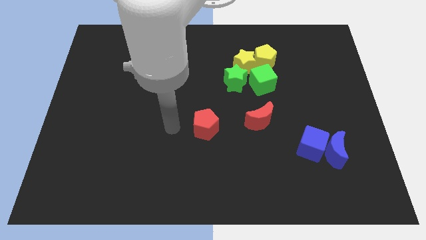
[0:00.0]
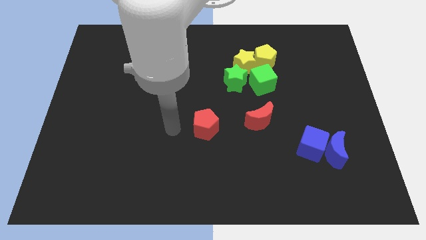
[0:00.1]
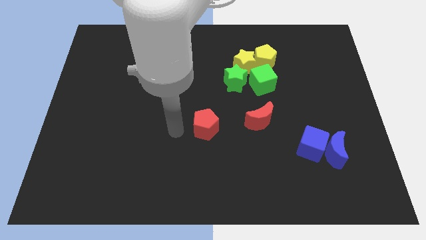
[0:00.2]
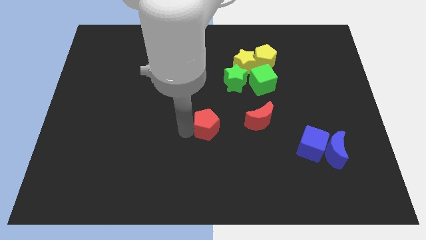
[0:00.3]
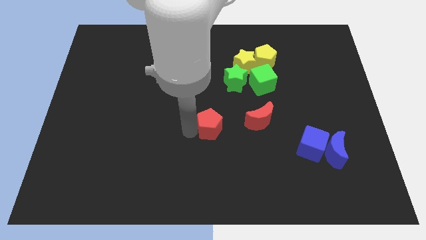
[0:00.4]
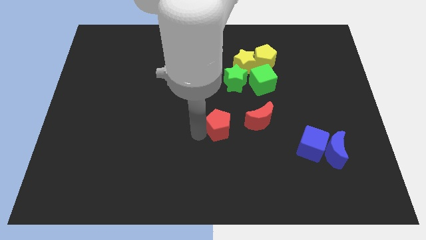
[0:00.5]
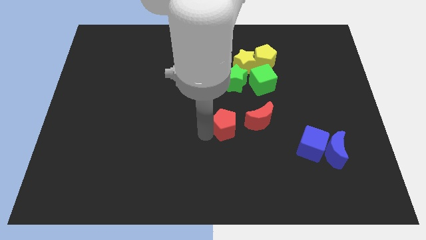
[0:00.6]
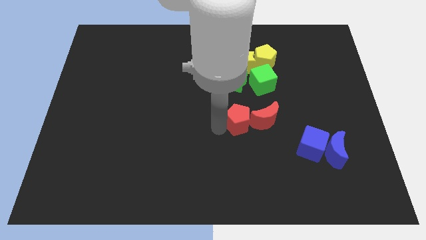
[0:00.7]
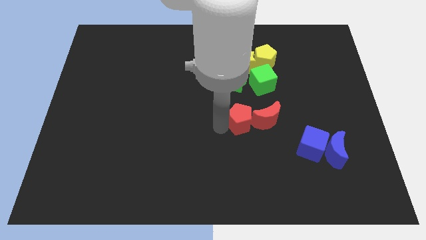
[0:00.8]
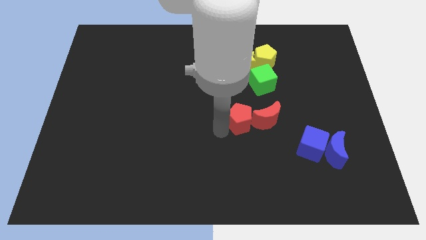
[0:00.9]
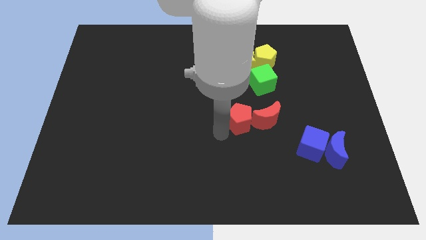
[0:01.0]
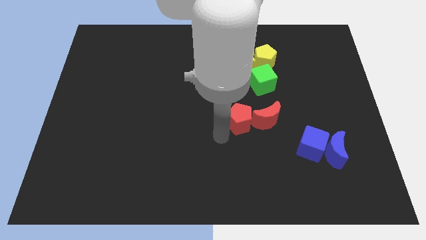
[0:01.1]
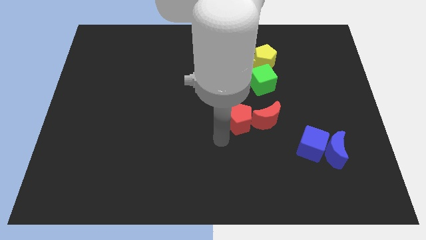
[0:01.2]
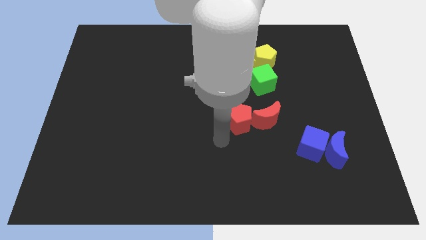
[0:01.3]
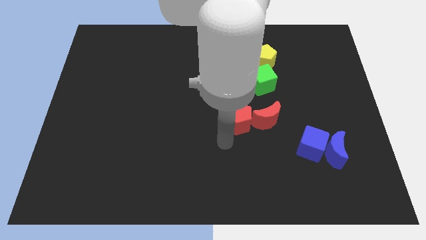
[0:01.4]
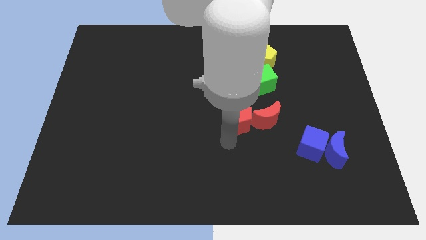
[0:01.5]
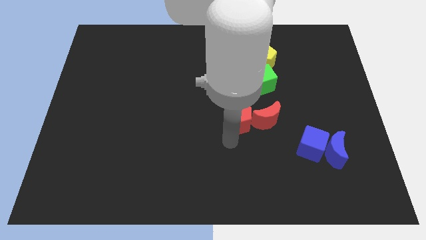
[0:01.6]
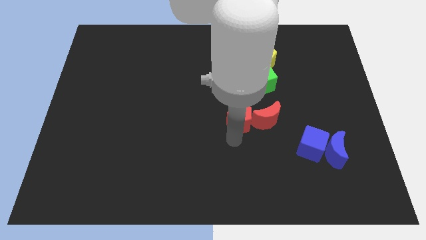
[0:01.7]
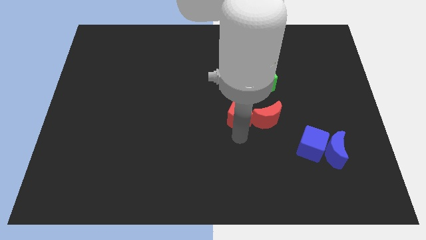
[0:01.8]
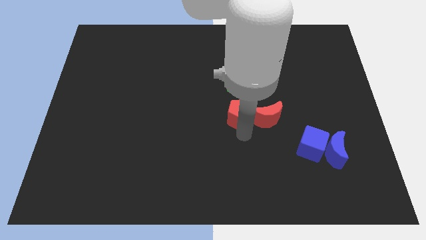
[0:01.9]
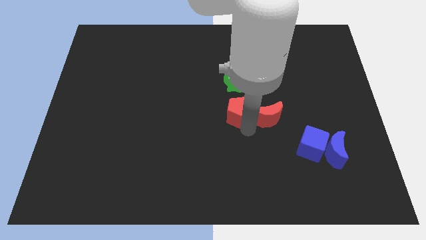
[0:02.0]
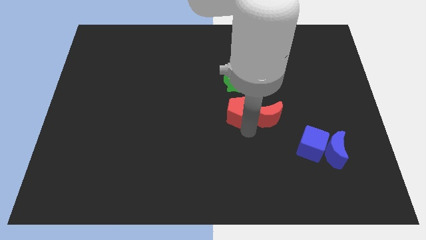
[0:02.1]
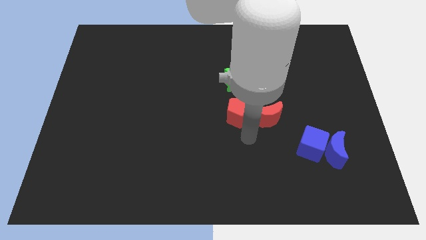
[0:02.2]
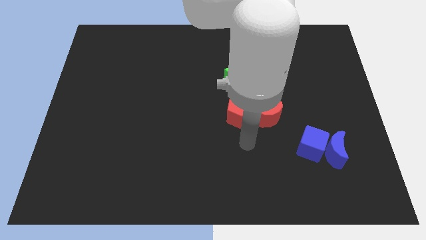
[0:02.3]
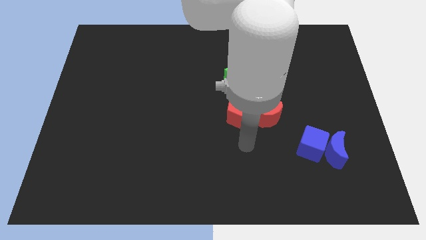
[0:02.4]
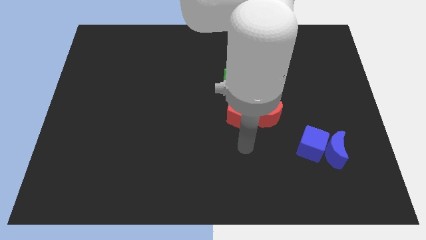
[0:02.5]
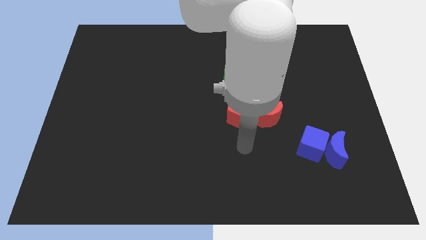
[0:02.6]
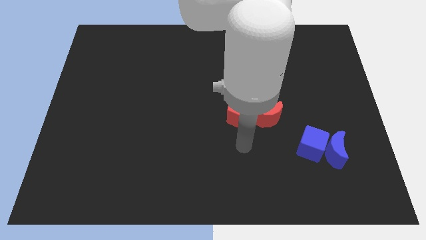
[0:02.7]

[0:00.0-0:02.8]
push red pentagon into the red crescent

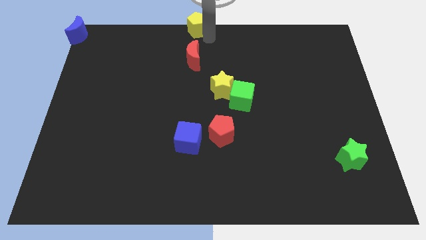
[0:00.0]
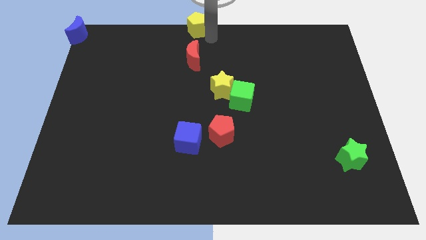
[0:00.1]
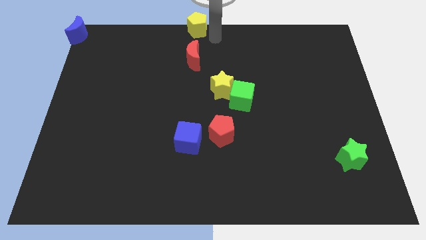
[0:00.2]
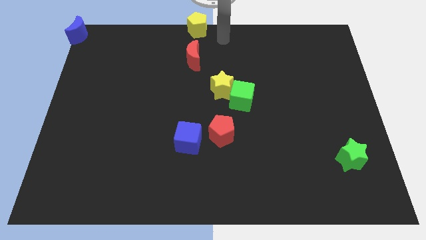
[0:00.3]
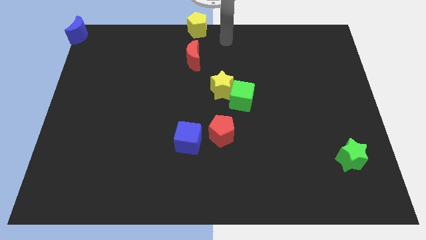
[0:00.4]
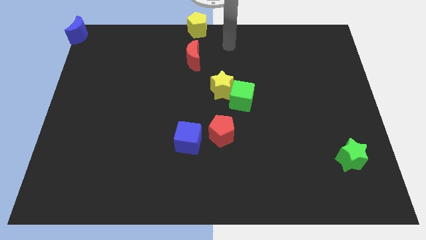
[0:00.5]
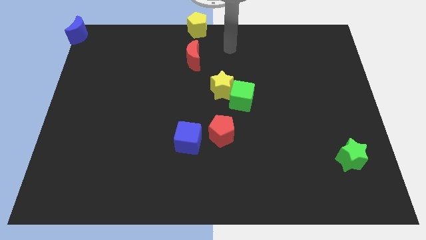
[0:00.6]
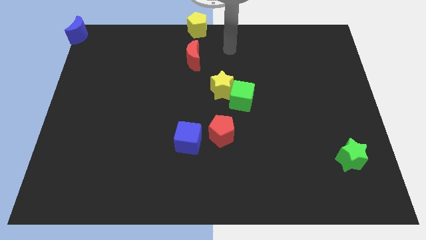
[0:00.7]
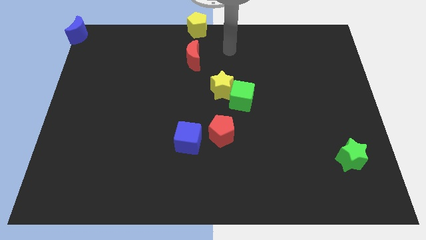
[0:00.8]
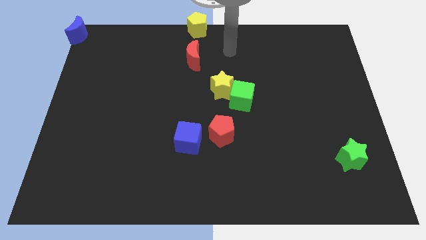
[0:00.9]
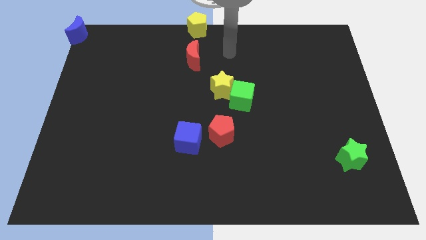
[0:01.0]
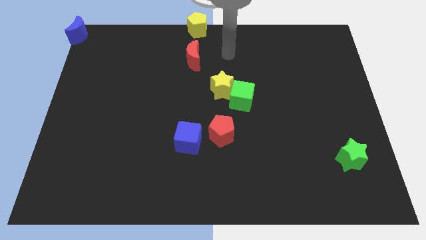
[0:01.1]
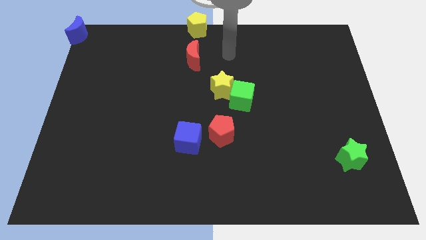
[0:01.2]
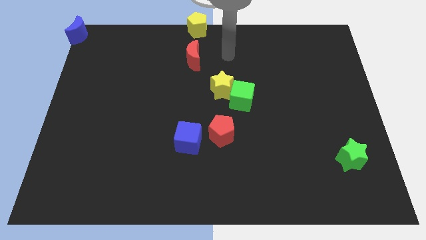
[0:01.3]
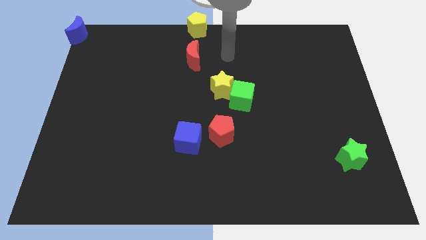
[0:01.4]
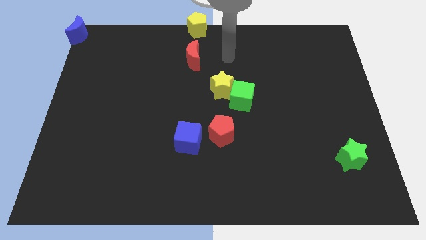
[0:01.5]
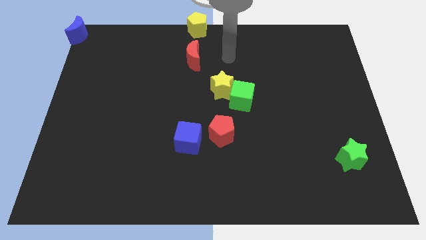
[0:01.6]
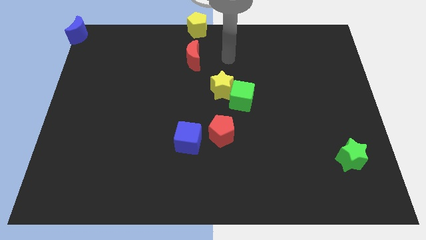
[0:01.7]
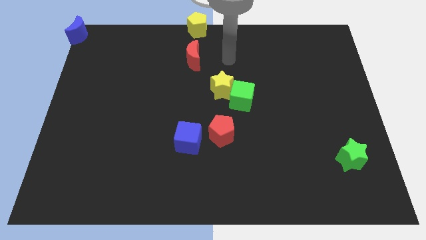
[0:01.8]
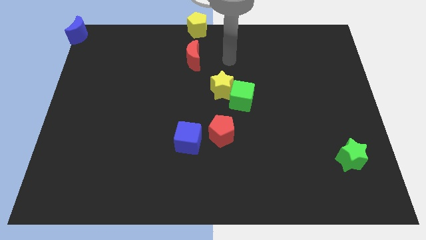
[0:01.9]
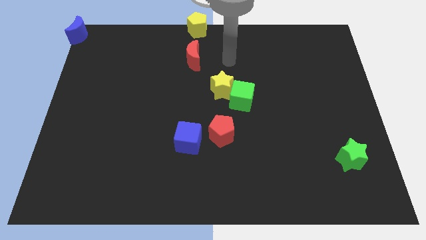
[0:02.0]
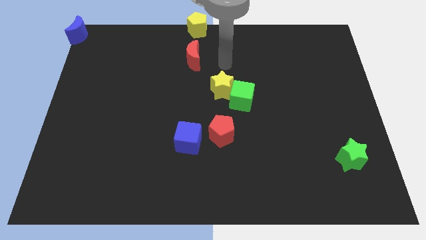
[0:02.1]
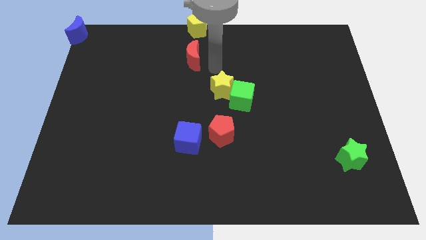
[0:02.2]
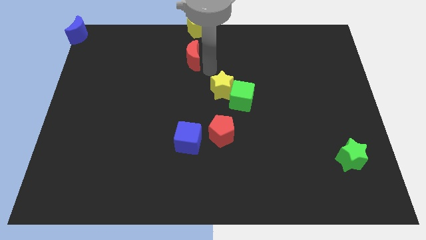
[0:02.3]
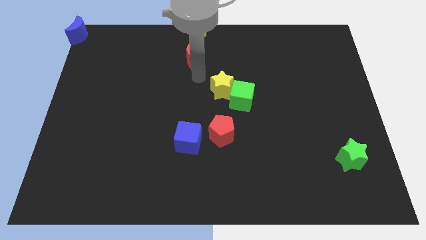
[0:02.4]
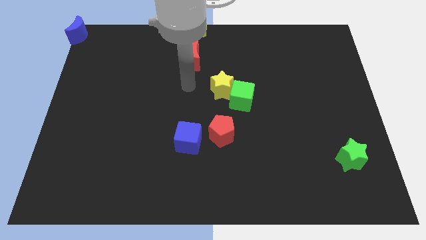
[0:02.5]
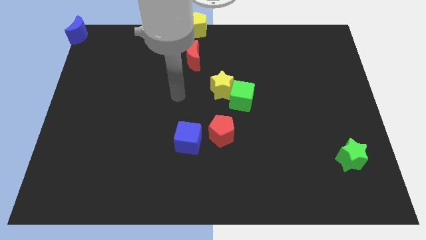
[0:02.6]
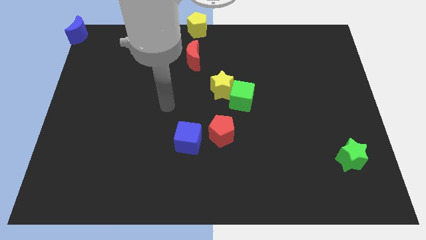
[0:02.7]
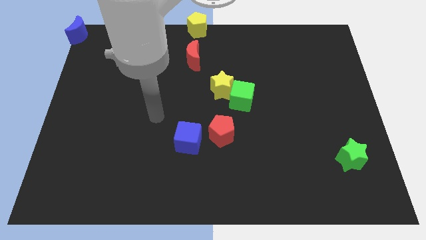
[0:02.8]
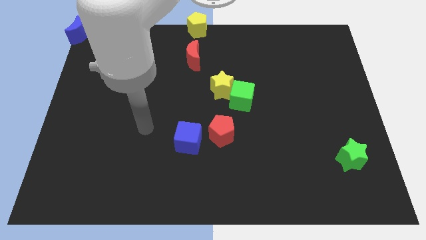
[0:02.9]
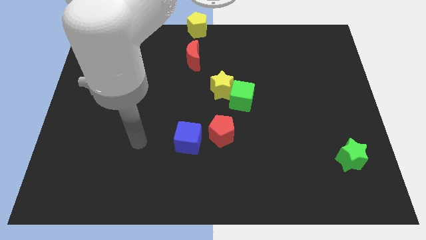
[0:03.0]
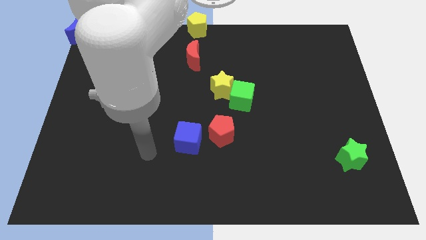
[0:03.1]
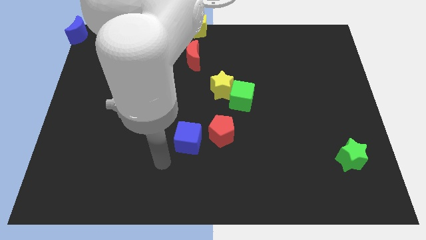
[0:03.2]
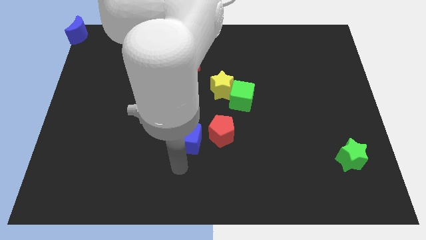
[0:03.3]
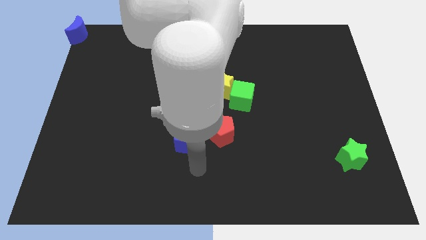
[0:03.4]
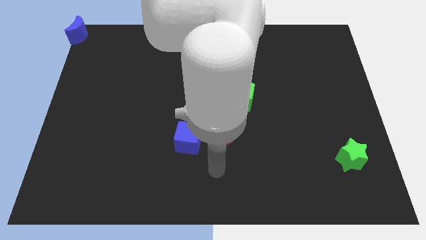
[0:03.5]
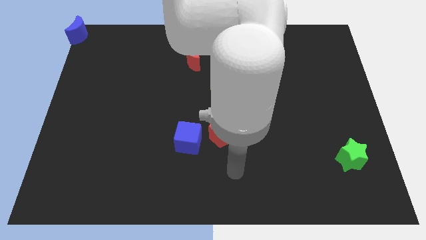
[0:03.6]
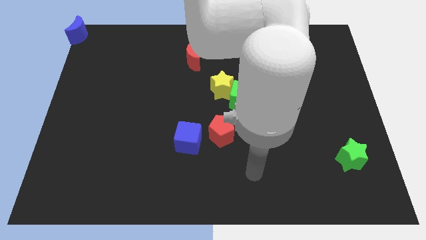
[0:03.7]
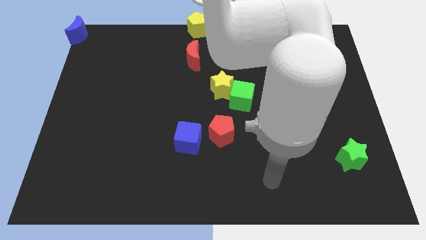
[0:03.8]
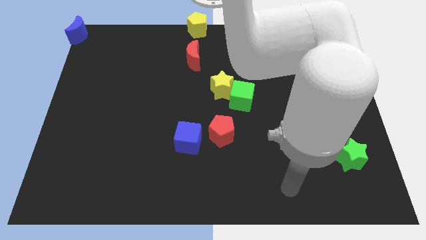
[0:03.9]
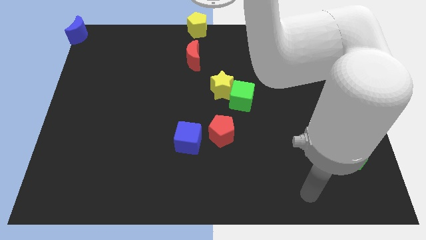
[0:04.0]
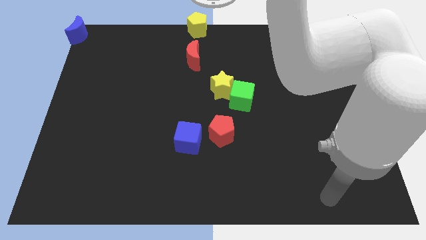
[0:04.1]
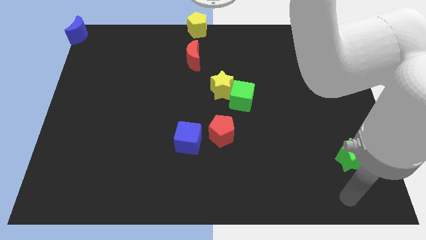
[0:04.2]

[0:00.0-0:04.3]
move your arm away from the yellow pentagon

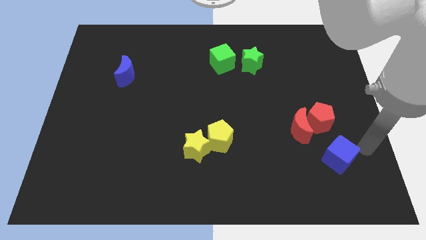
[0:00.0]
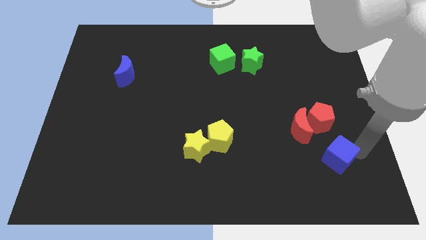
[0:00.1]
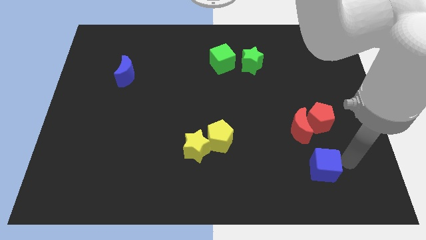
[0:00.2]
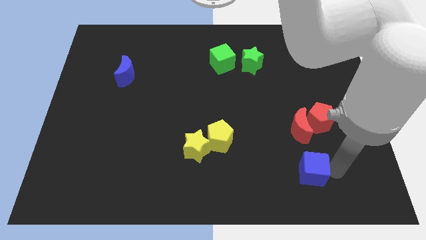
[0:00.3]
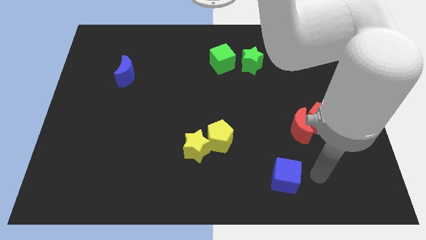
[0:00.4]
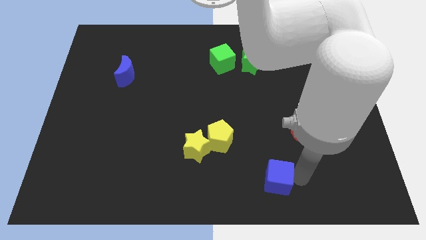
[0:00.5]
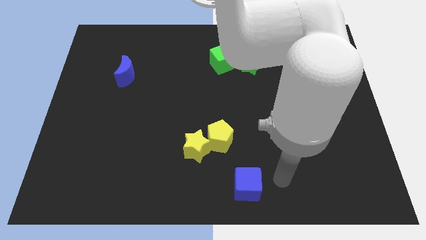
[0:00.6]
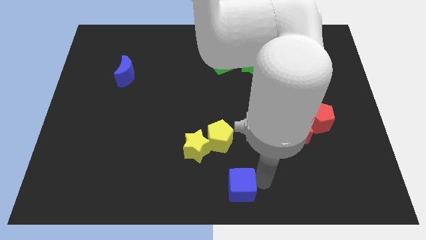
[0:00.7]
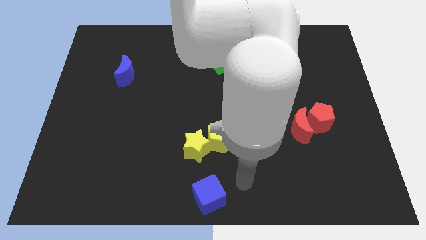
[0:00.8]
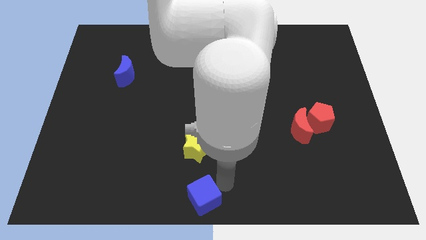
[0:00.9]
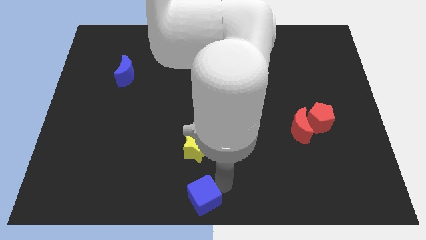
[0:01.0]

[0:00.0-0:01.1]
place blue cube to the bottom of yellow star

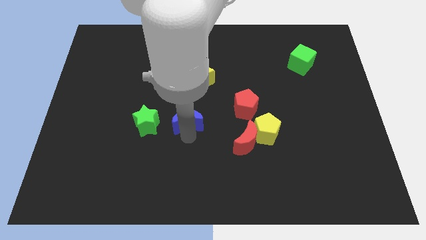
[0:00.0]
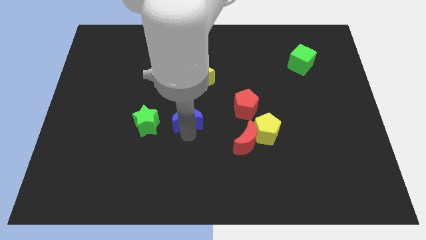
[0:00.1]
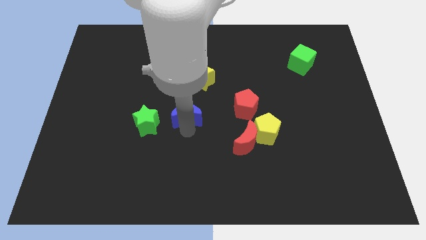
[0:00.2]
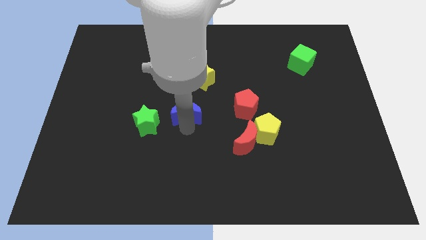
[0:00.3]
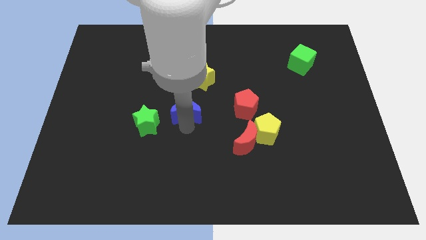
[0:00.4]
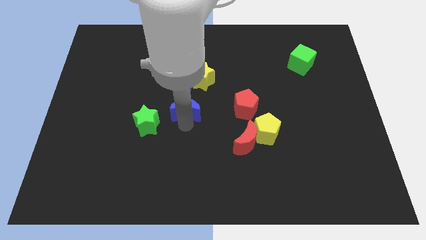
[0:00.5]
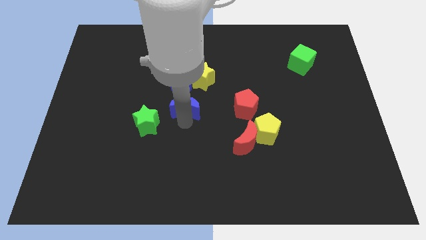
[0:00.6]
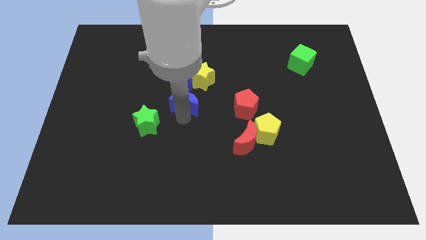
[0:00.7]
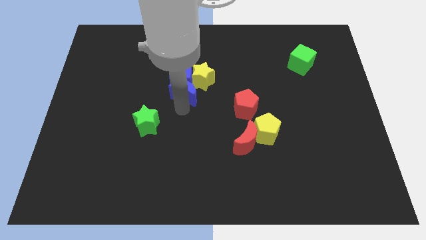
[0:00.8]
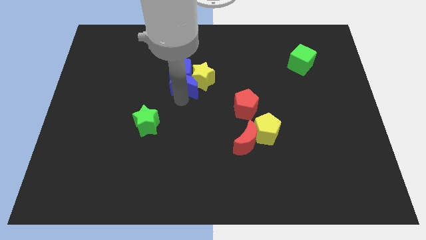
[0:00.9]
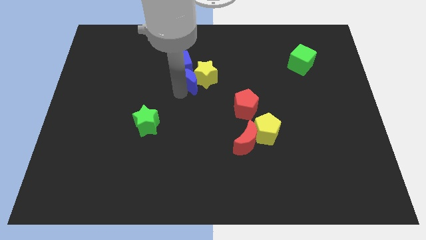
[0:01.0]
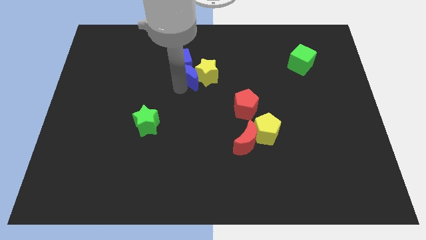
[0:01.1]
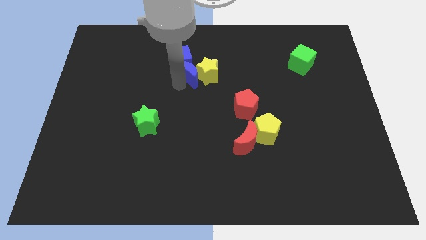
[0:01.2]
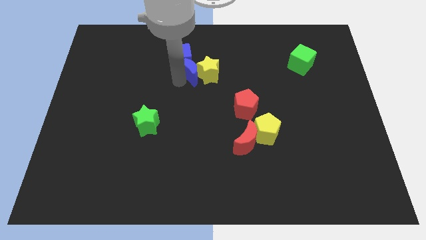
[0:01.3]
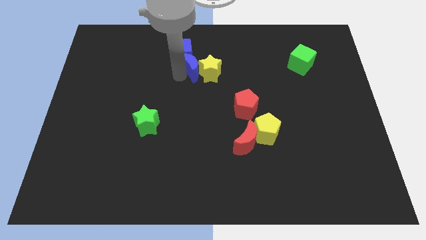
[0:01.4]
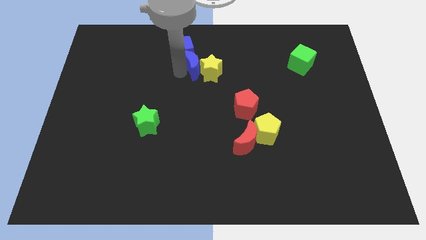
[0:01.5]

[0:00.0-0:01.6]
push the blue moon into blue cube
